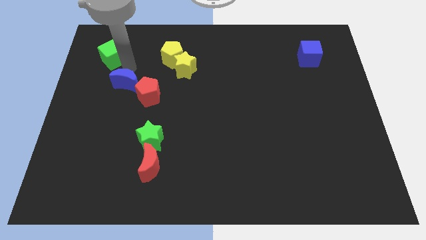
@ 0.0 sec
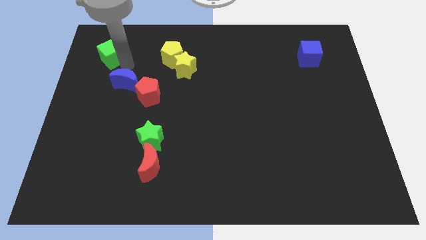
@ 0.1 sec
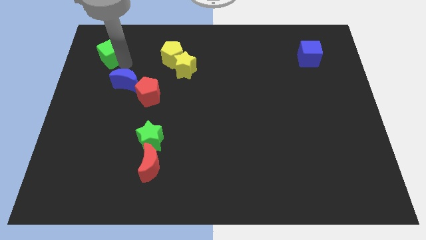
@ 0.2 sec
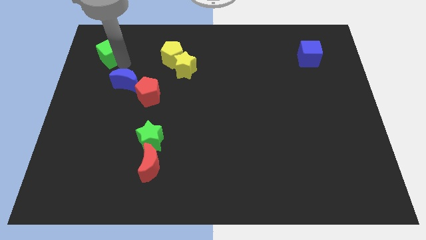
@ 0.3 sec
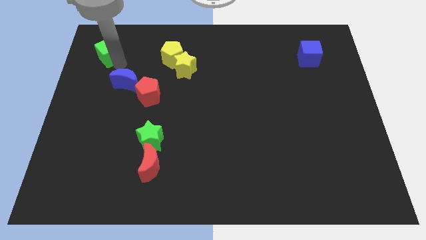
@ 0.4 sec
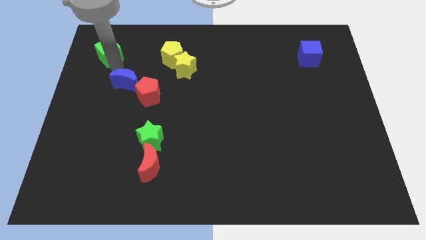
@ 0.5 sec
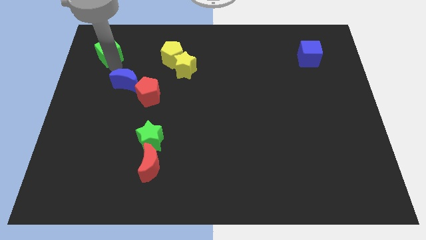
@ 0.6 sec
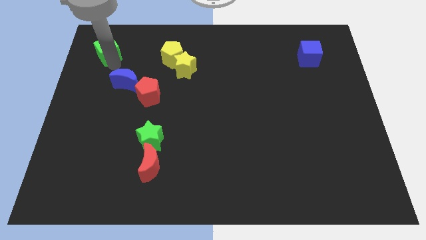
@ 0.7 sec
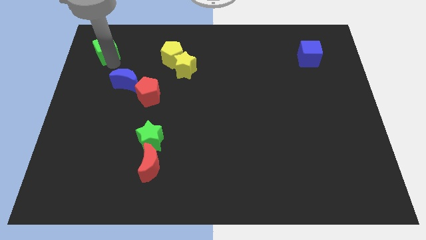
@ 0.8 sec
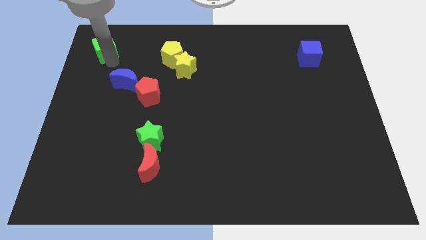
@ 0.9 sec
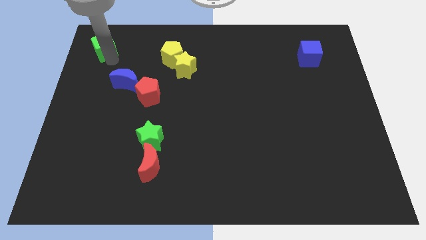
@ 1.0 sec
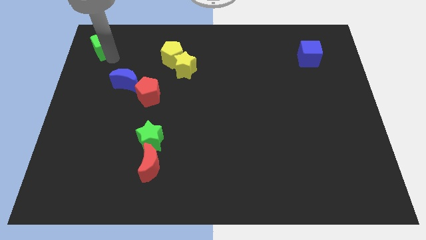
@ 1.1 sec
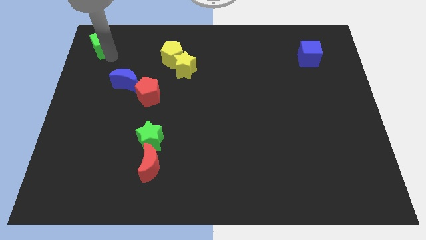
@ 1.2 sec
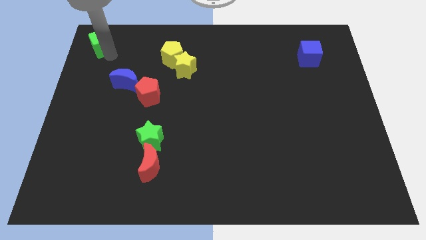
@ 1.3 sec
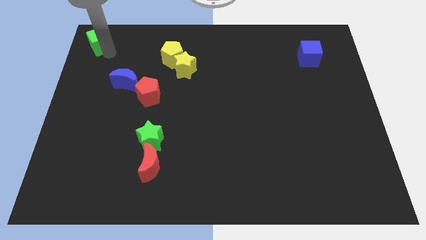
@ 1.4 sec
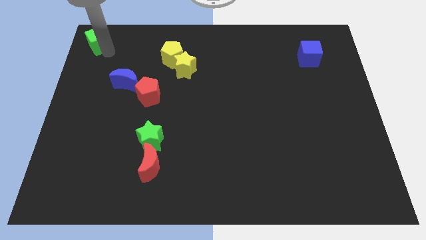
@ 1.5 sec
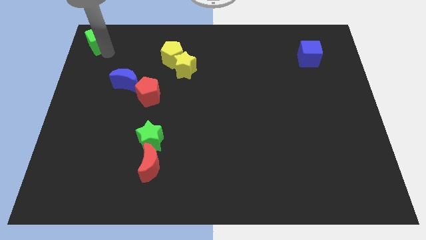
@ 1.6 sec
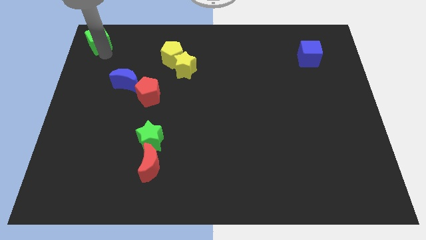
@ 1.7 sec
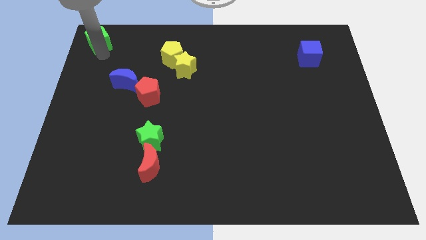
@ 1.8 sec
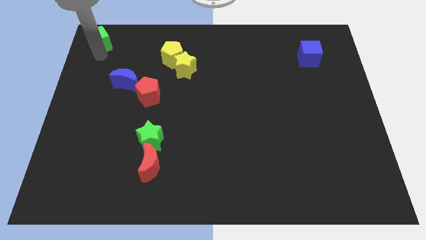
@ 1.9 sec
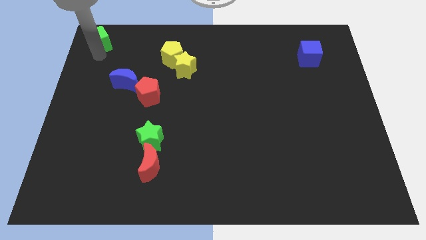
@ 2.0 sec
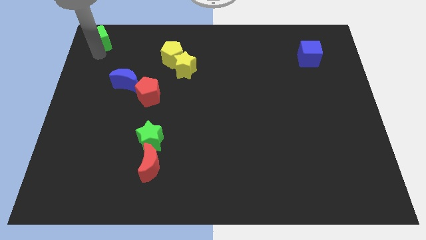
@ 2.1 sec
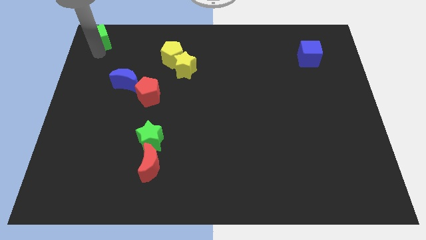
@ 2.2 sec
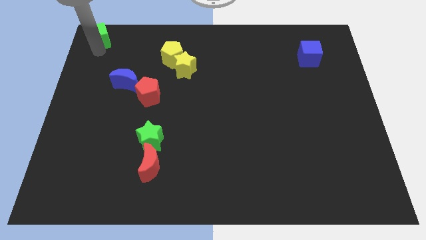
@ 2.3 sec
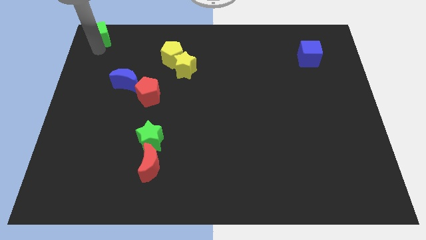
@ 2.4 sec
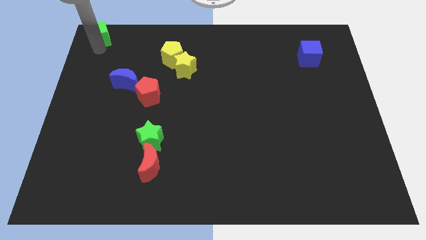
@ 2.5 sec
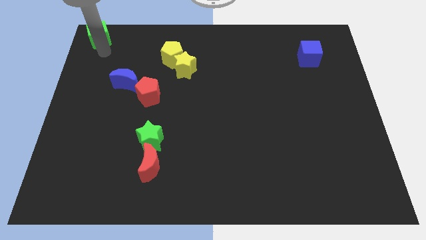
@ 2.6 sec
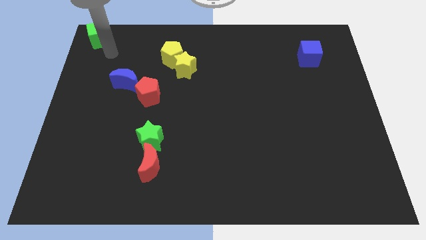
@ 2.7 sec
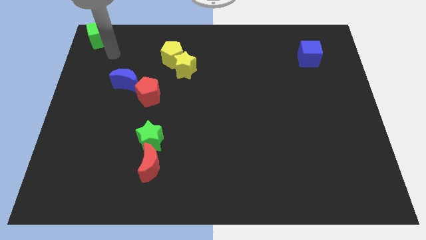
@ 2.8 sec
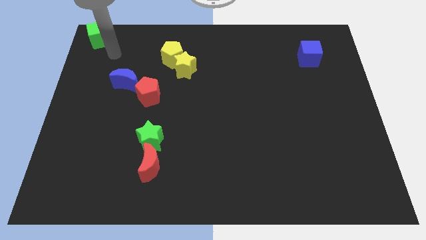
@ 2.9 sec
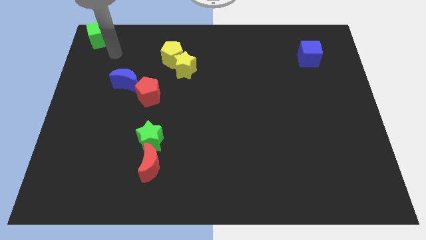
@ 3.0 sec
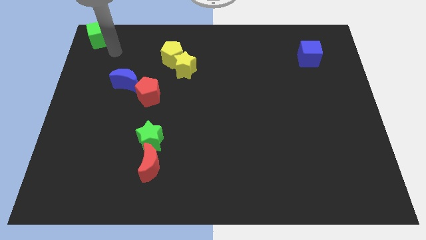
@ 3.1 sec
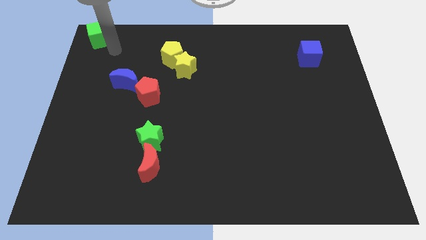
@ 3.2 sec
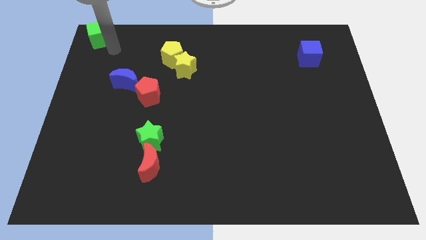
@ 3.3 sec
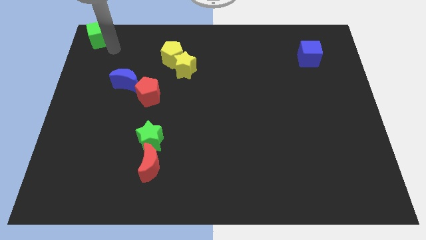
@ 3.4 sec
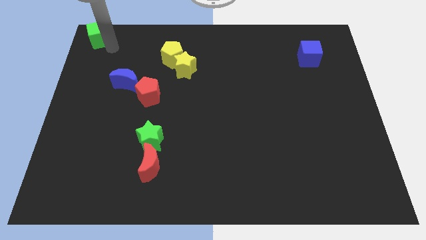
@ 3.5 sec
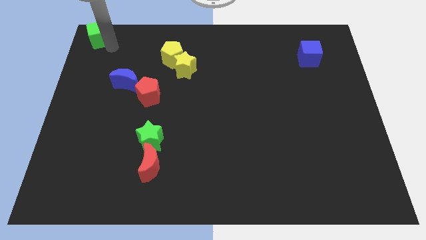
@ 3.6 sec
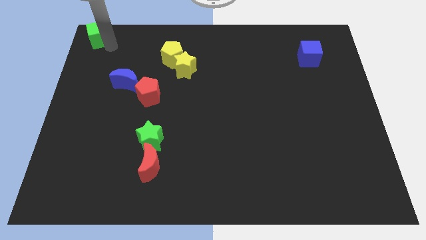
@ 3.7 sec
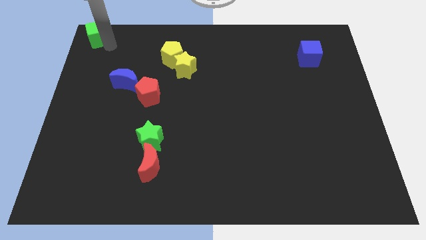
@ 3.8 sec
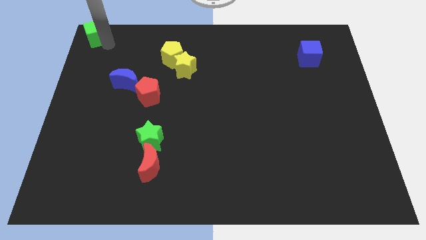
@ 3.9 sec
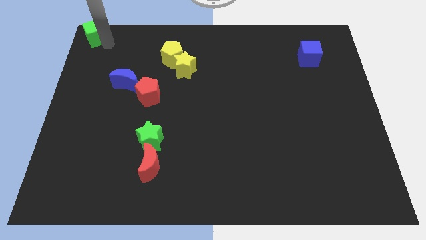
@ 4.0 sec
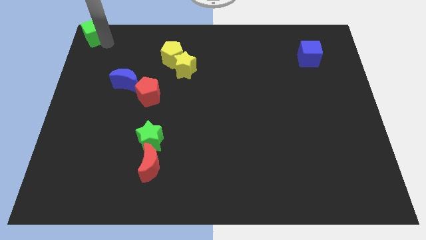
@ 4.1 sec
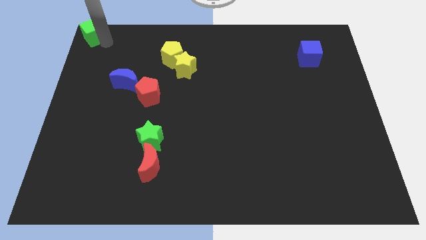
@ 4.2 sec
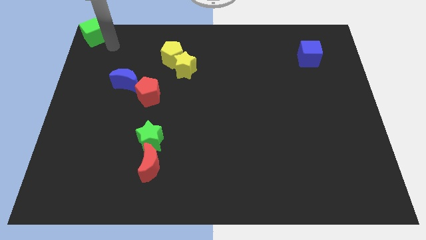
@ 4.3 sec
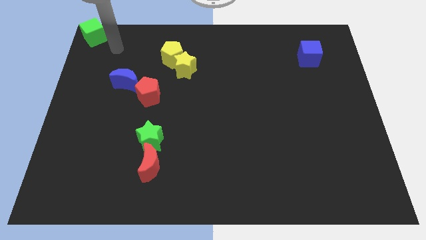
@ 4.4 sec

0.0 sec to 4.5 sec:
place the green cube towards the top left corner of the board

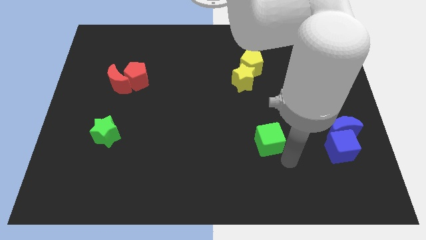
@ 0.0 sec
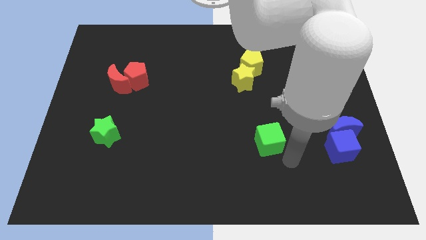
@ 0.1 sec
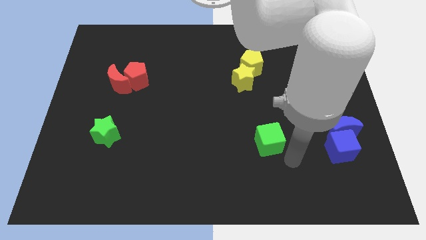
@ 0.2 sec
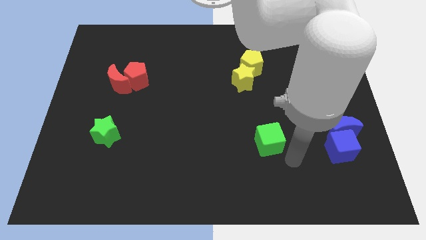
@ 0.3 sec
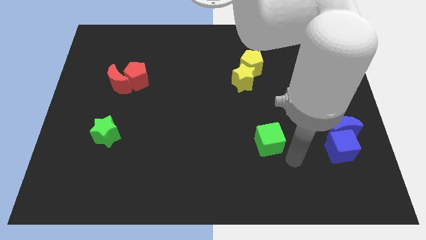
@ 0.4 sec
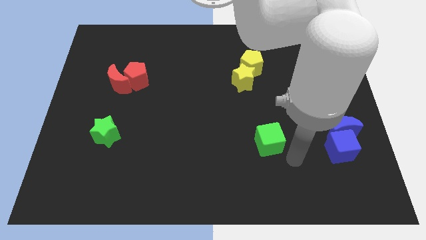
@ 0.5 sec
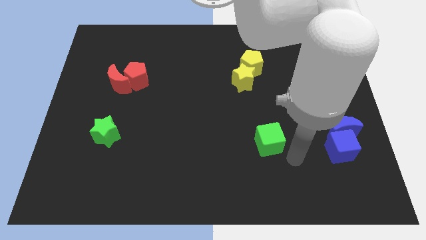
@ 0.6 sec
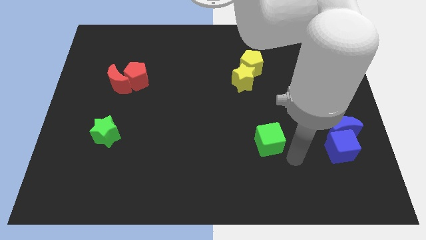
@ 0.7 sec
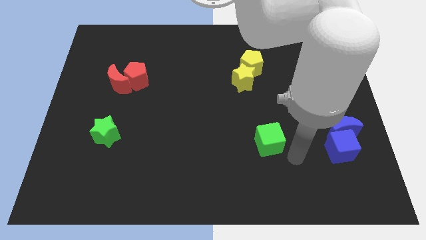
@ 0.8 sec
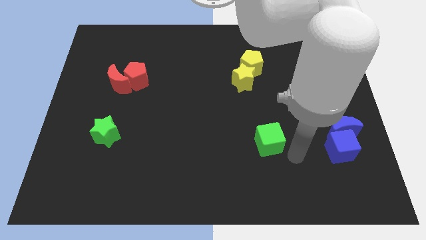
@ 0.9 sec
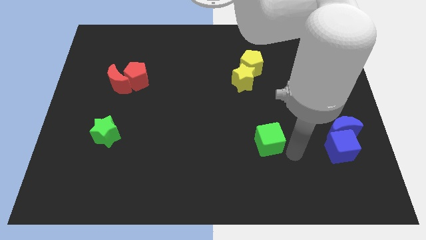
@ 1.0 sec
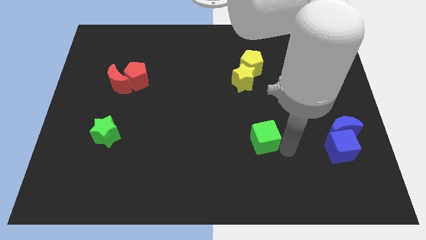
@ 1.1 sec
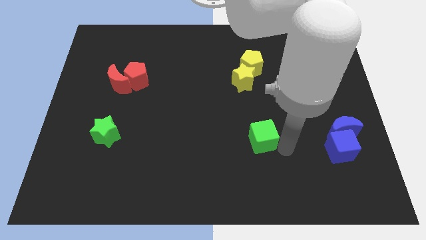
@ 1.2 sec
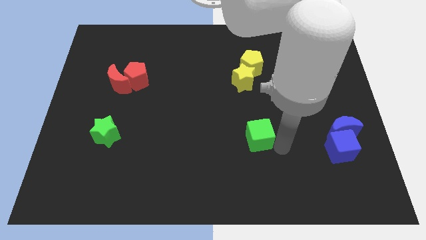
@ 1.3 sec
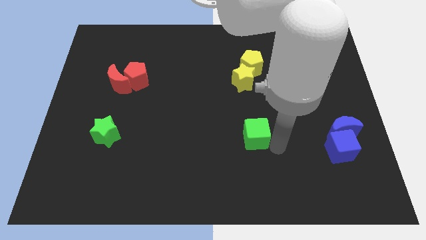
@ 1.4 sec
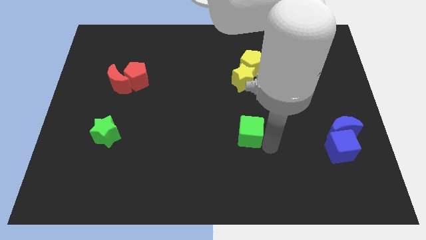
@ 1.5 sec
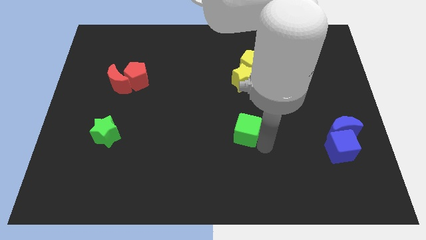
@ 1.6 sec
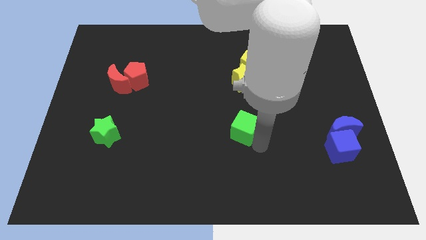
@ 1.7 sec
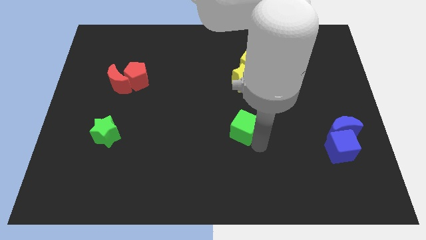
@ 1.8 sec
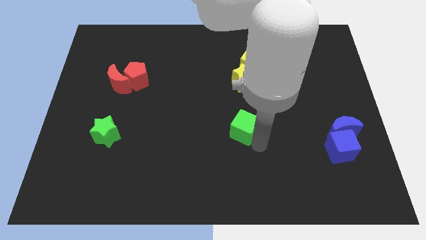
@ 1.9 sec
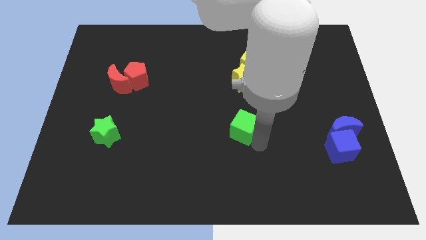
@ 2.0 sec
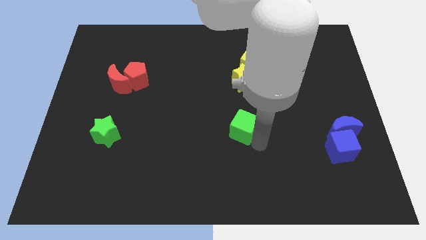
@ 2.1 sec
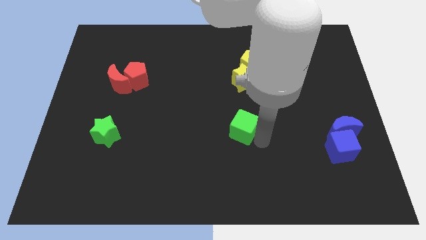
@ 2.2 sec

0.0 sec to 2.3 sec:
place the green cube below the yellow star

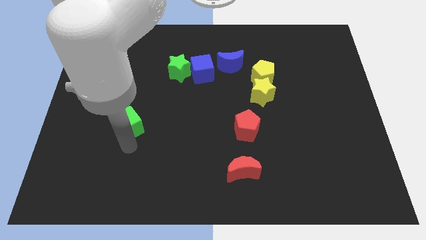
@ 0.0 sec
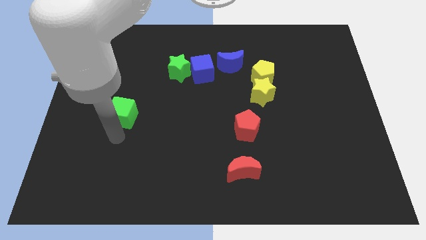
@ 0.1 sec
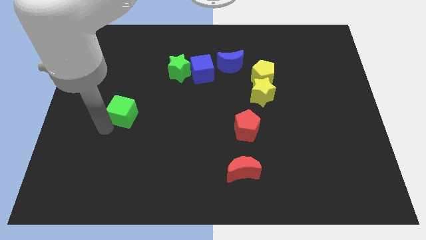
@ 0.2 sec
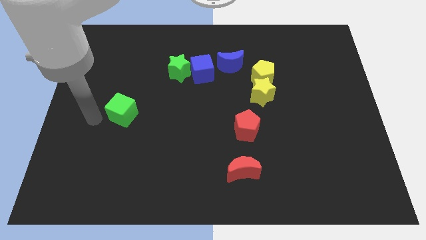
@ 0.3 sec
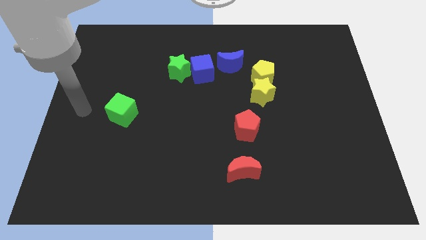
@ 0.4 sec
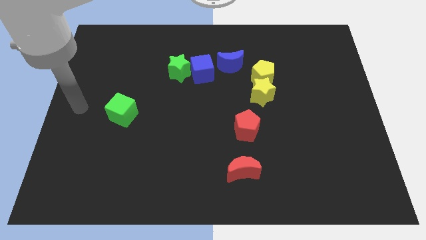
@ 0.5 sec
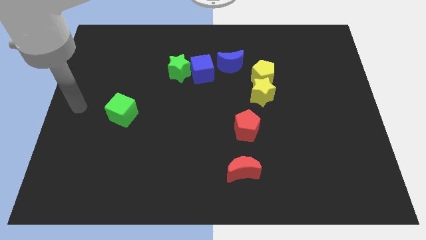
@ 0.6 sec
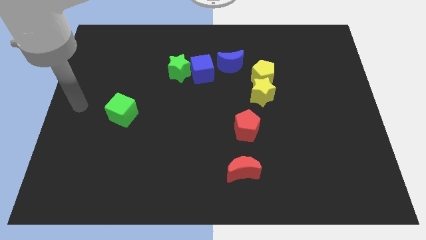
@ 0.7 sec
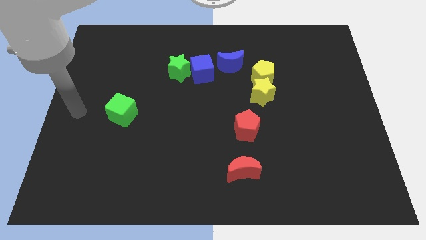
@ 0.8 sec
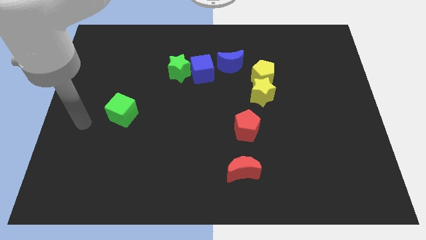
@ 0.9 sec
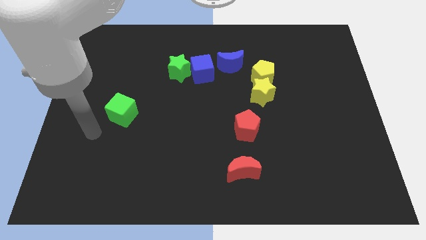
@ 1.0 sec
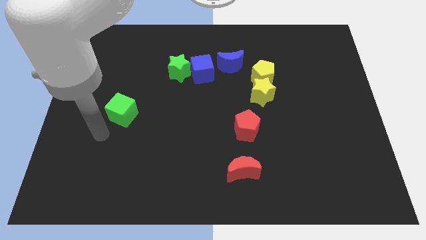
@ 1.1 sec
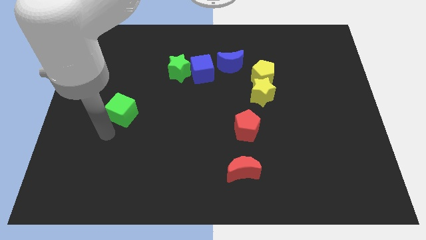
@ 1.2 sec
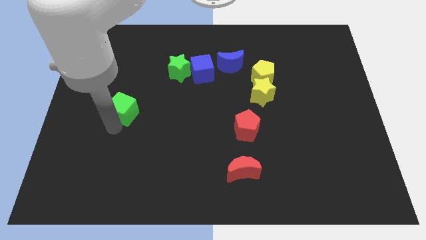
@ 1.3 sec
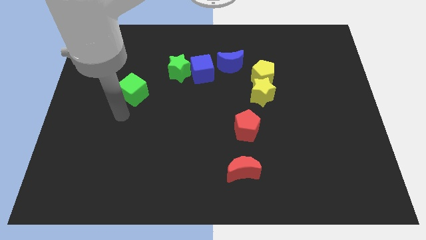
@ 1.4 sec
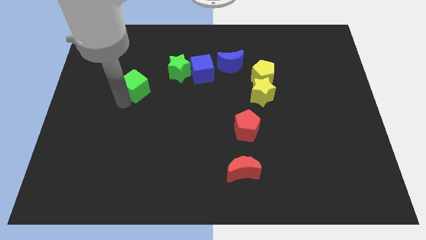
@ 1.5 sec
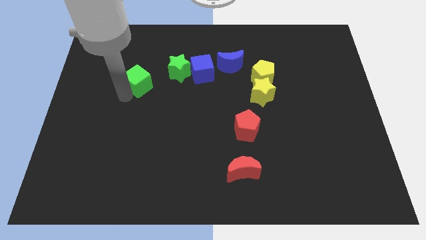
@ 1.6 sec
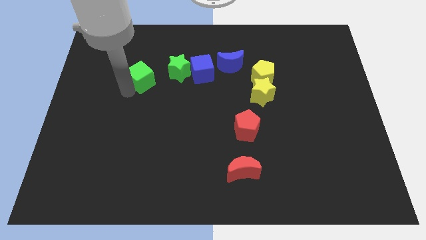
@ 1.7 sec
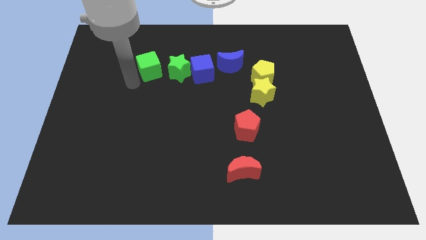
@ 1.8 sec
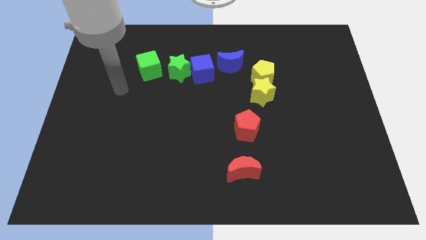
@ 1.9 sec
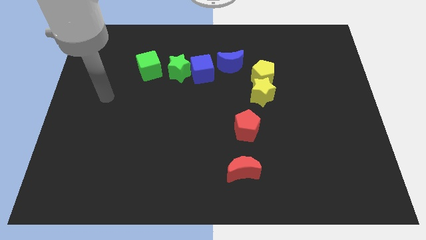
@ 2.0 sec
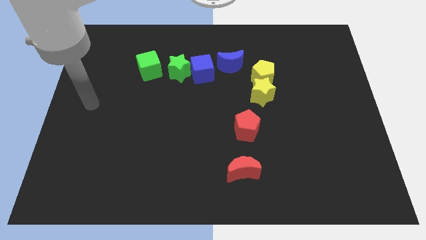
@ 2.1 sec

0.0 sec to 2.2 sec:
place the green cube to the left of green star
